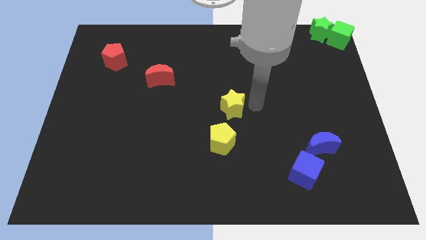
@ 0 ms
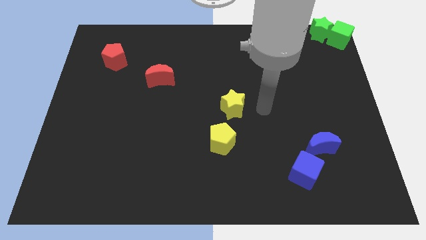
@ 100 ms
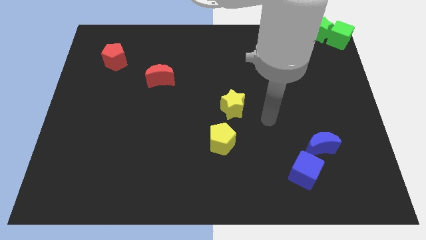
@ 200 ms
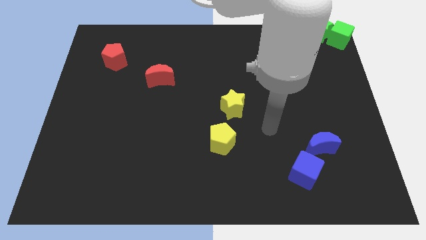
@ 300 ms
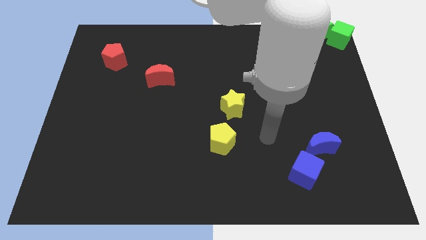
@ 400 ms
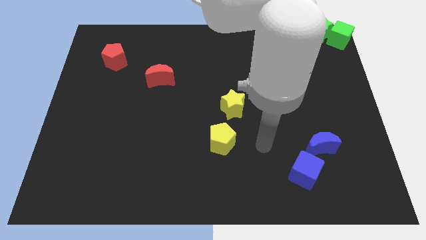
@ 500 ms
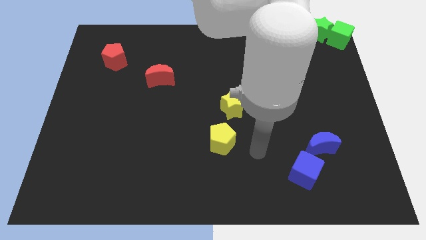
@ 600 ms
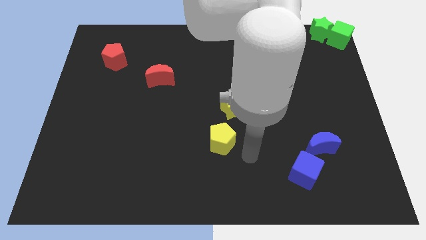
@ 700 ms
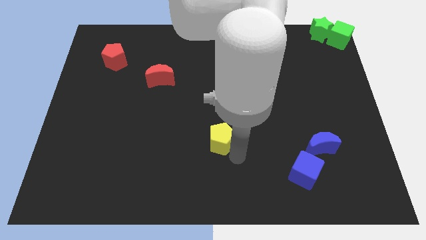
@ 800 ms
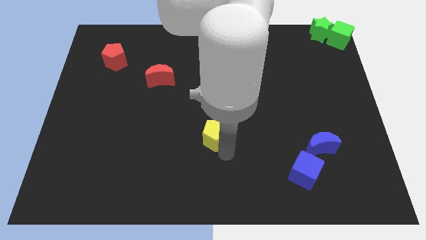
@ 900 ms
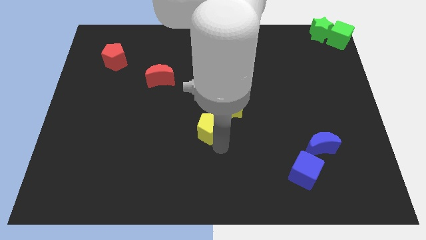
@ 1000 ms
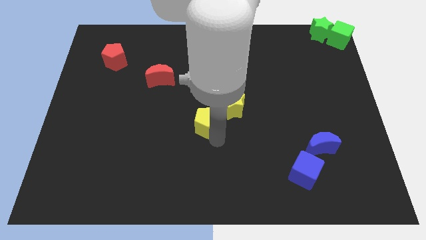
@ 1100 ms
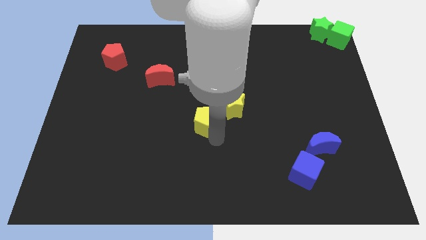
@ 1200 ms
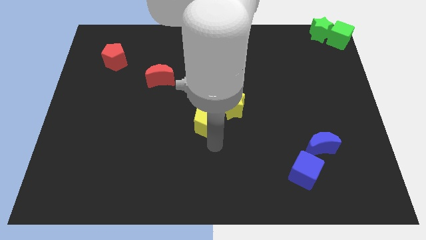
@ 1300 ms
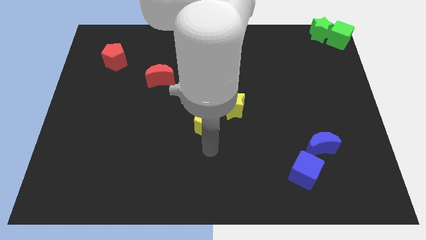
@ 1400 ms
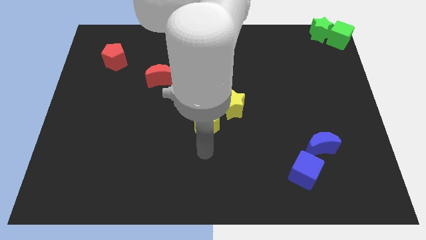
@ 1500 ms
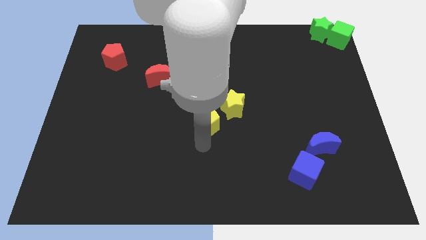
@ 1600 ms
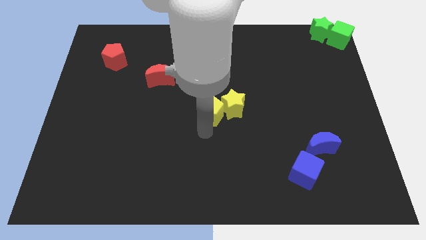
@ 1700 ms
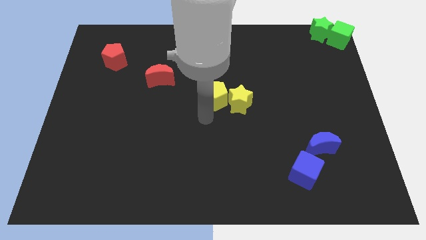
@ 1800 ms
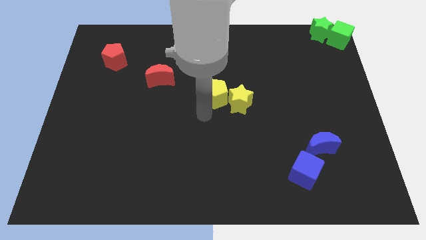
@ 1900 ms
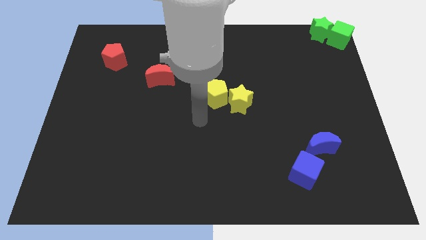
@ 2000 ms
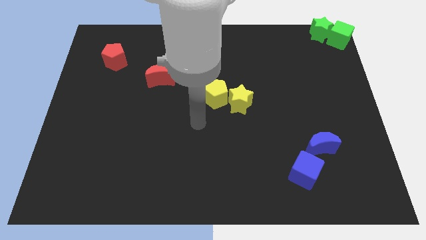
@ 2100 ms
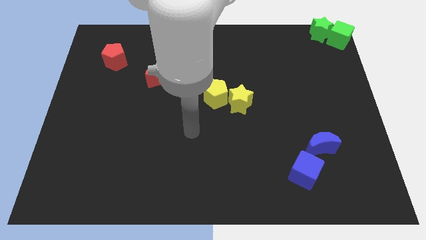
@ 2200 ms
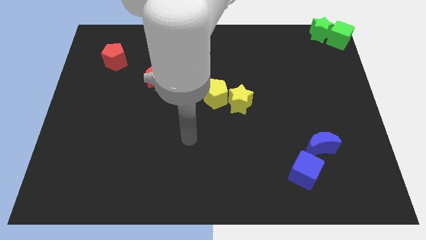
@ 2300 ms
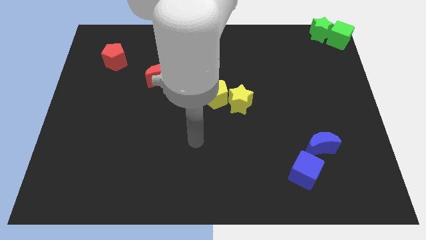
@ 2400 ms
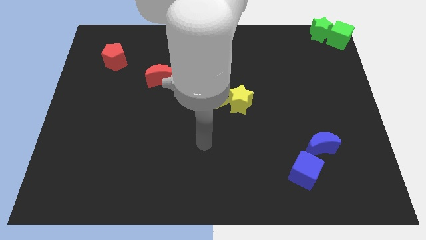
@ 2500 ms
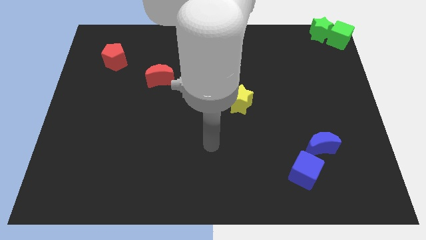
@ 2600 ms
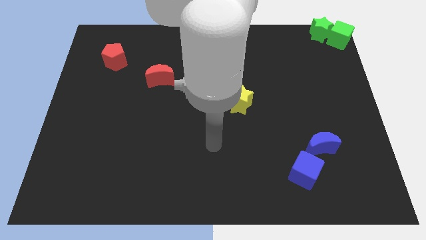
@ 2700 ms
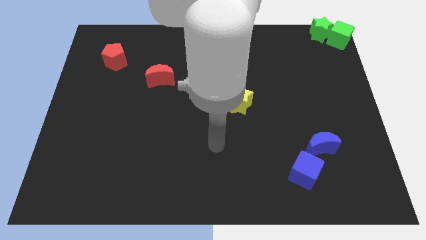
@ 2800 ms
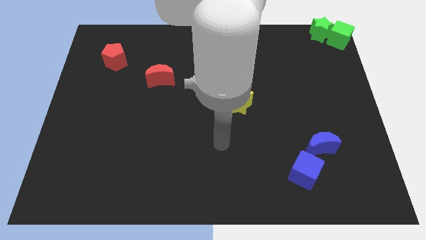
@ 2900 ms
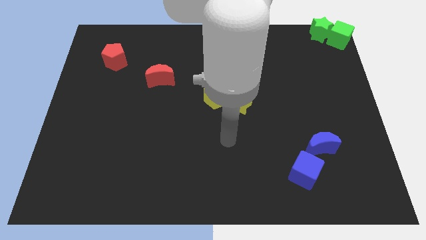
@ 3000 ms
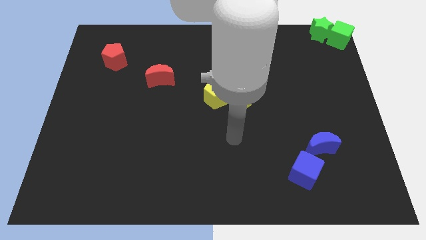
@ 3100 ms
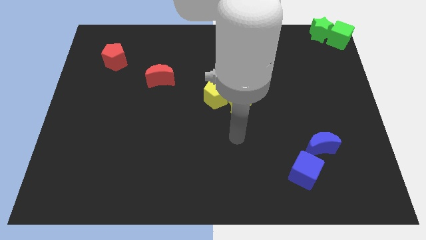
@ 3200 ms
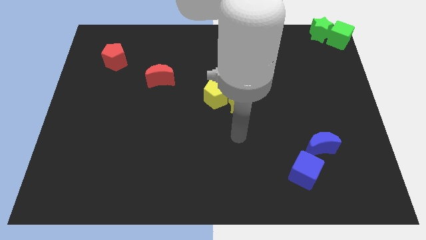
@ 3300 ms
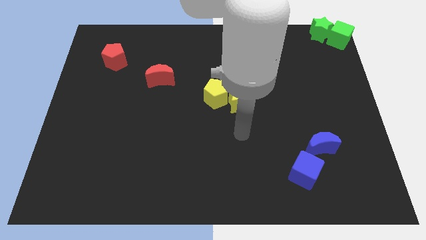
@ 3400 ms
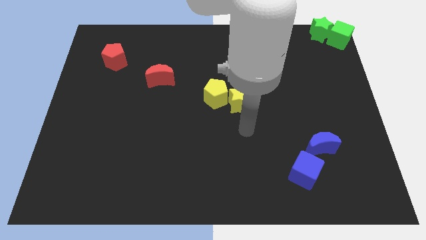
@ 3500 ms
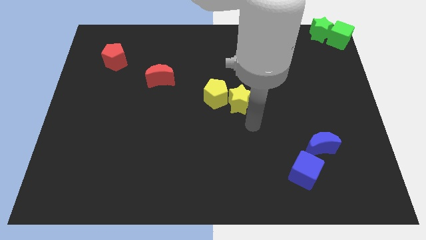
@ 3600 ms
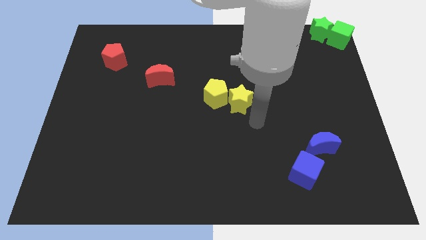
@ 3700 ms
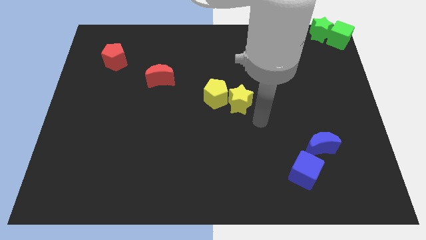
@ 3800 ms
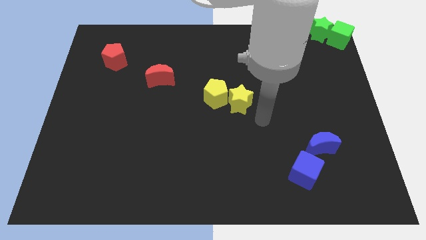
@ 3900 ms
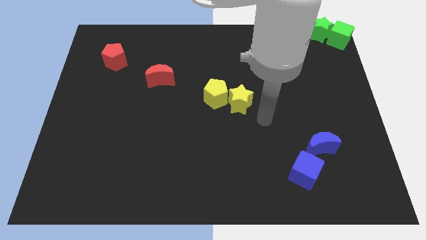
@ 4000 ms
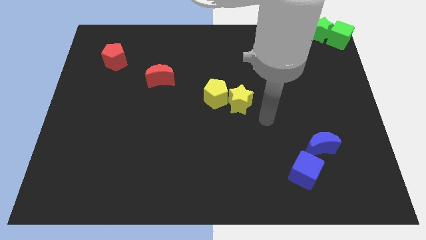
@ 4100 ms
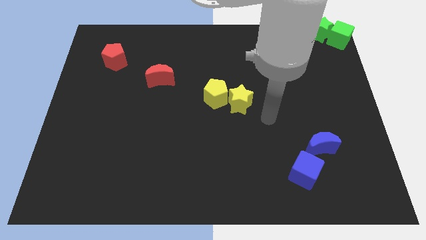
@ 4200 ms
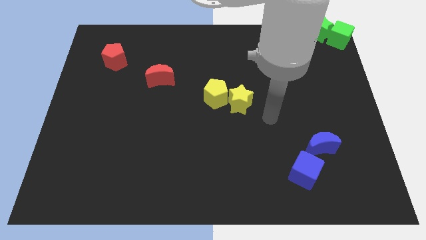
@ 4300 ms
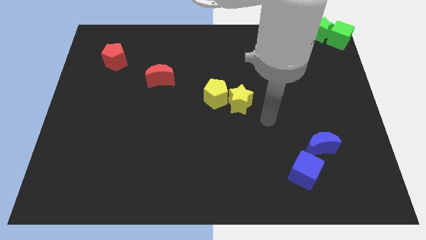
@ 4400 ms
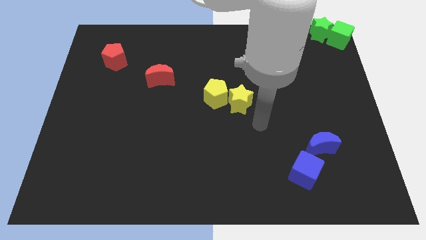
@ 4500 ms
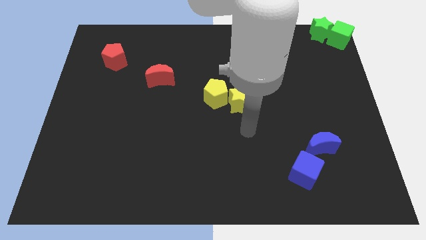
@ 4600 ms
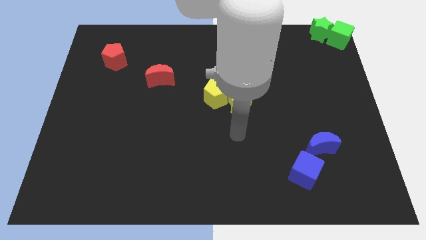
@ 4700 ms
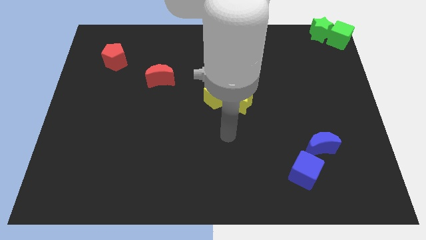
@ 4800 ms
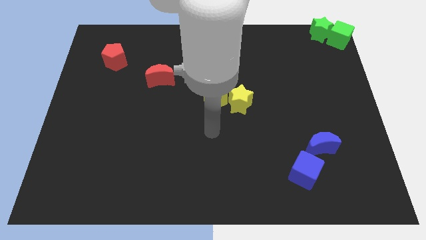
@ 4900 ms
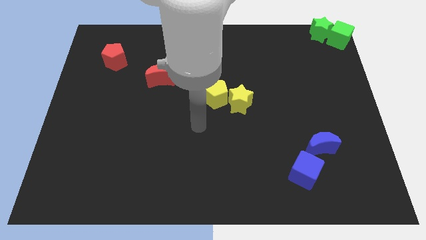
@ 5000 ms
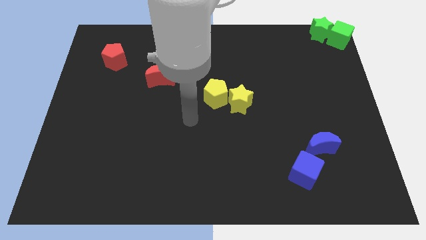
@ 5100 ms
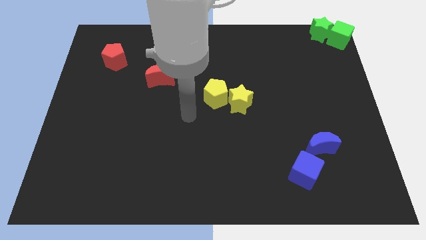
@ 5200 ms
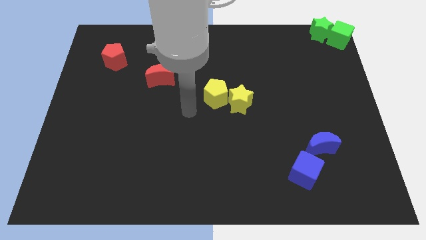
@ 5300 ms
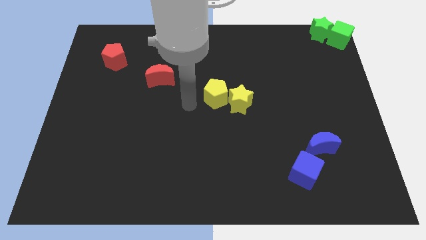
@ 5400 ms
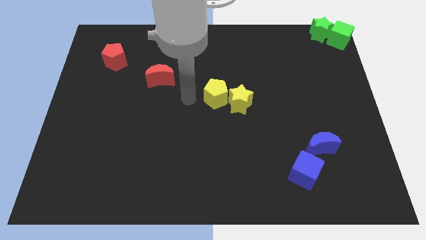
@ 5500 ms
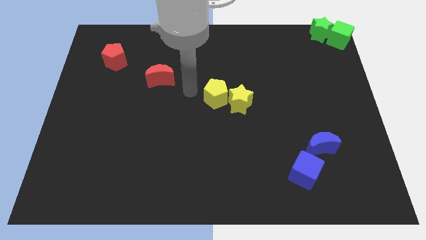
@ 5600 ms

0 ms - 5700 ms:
push the yellow pentagon into the yellow star

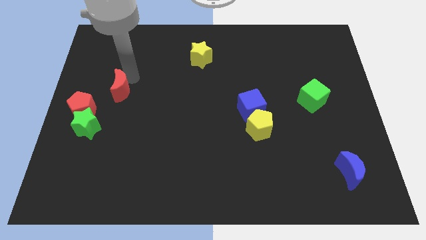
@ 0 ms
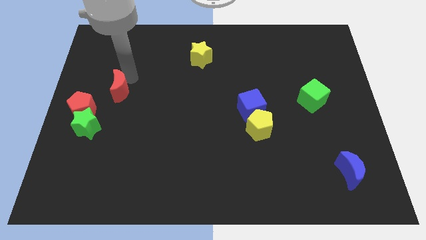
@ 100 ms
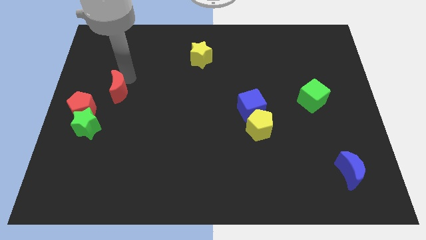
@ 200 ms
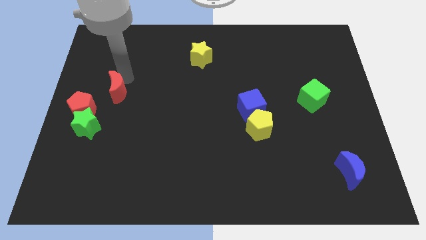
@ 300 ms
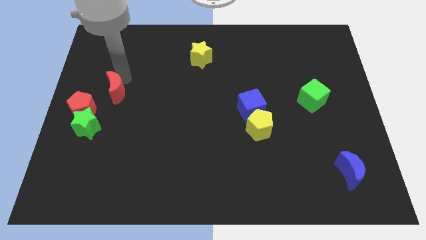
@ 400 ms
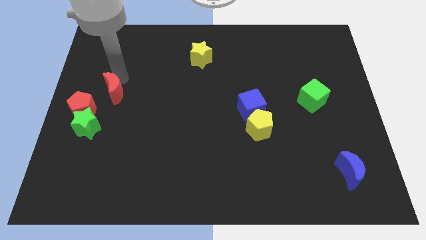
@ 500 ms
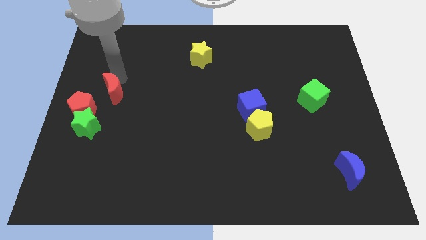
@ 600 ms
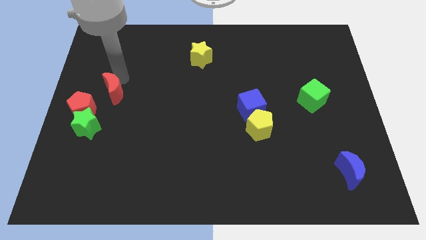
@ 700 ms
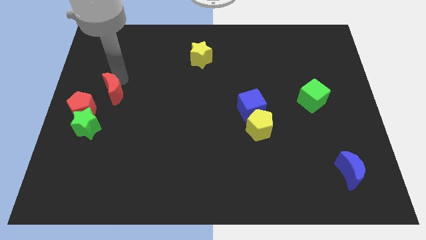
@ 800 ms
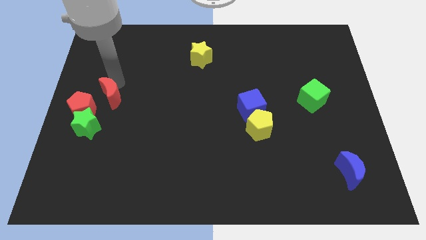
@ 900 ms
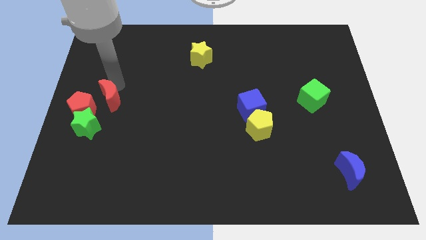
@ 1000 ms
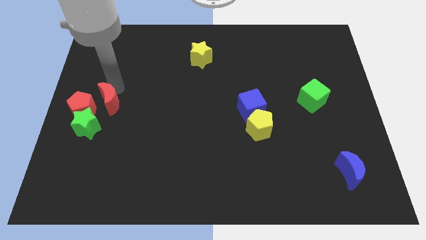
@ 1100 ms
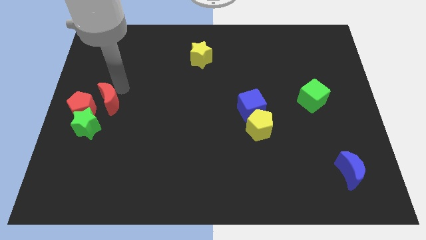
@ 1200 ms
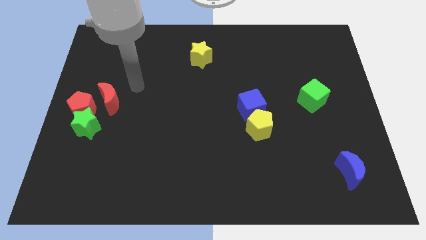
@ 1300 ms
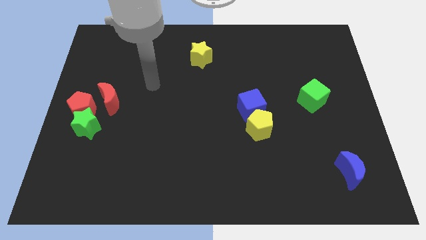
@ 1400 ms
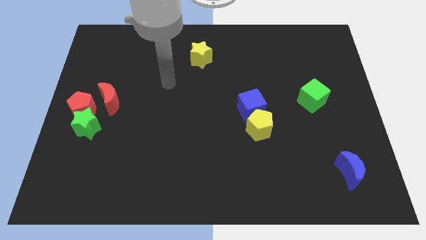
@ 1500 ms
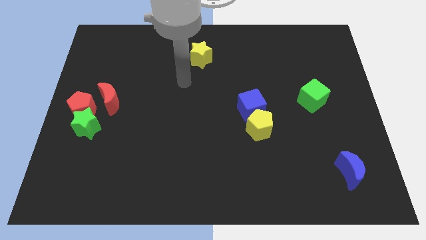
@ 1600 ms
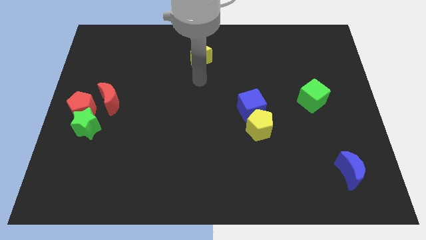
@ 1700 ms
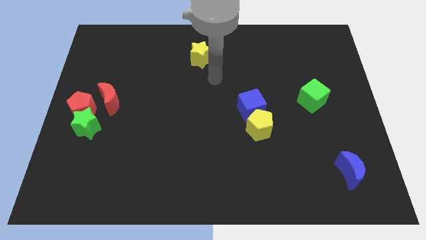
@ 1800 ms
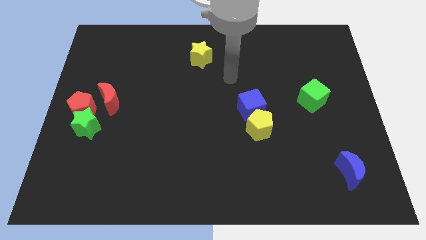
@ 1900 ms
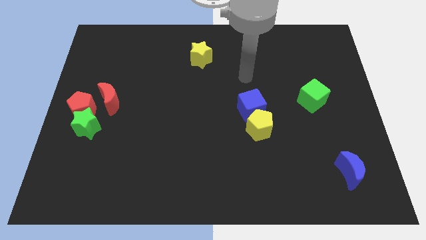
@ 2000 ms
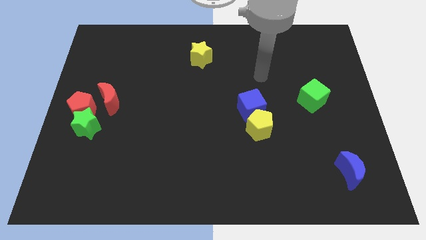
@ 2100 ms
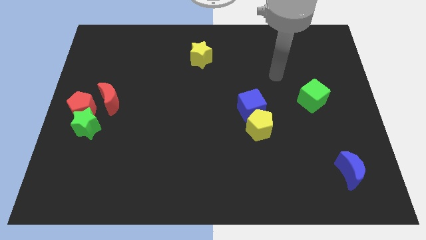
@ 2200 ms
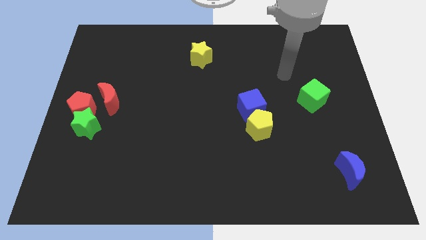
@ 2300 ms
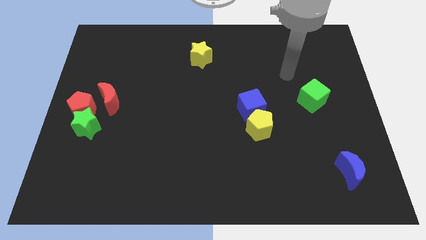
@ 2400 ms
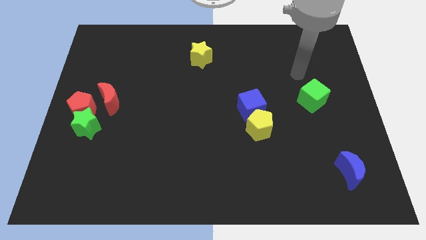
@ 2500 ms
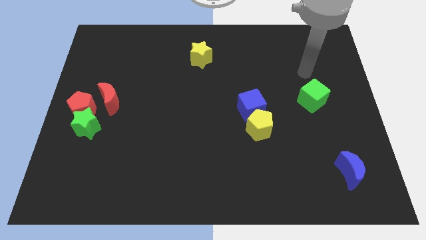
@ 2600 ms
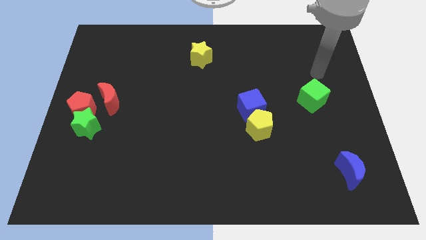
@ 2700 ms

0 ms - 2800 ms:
place your arm above green cube

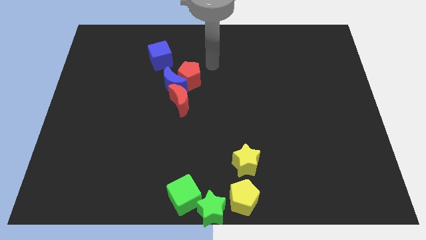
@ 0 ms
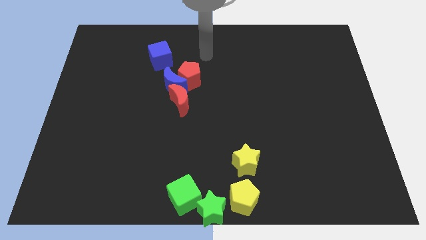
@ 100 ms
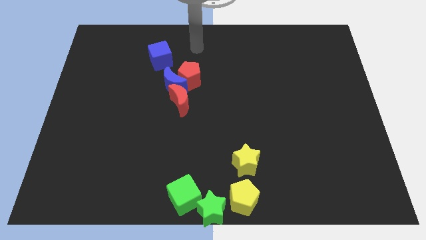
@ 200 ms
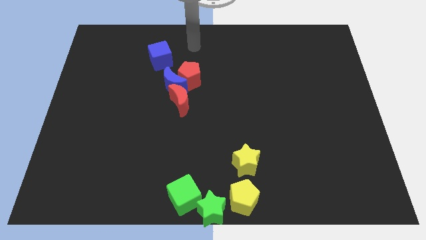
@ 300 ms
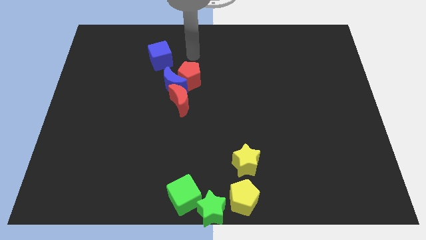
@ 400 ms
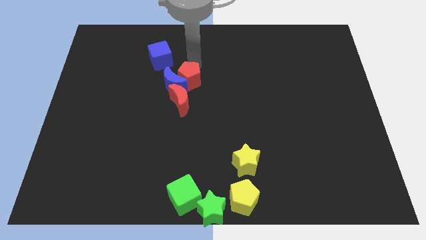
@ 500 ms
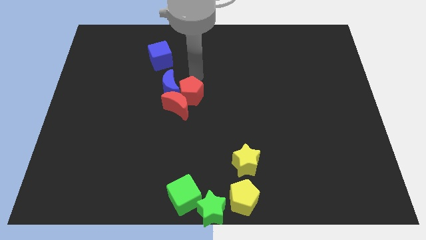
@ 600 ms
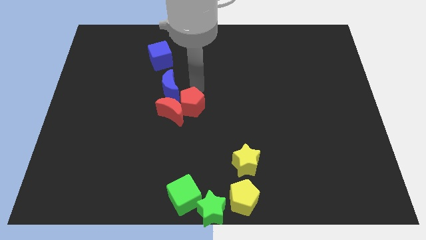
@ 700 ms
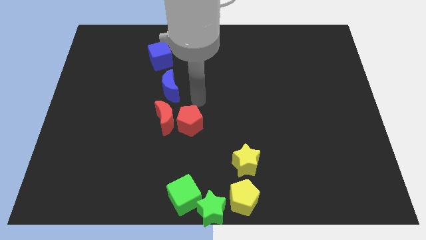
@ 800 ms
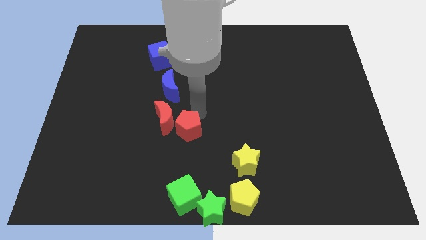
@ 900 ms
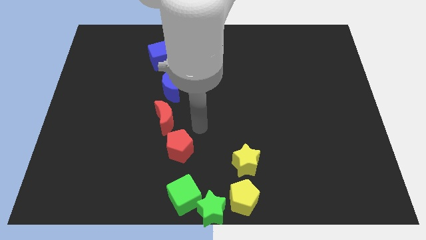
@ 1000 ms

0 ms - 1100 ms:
separate the red pentagon from the blue crescent
